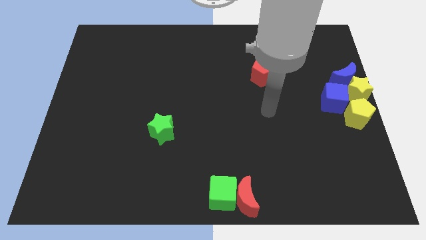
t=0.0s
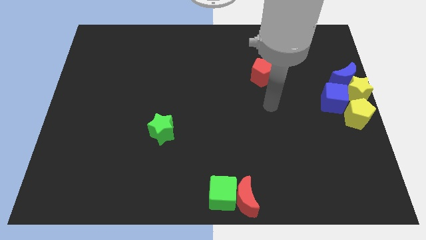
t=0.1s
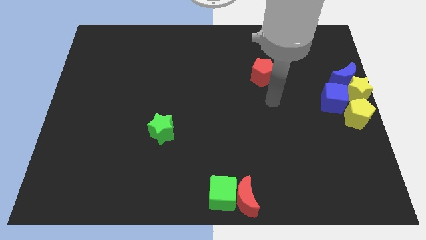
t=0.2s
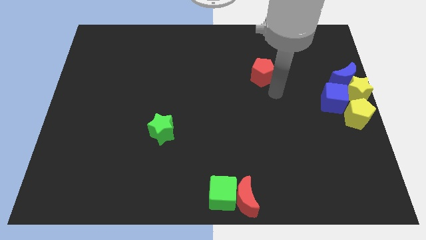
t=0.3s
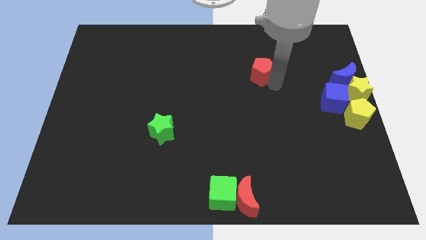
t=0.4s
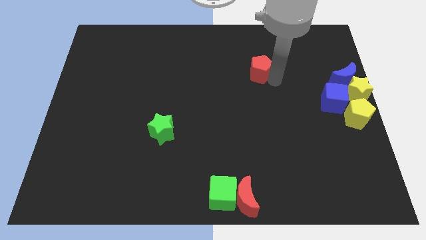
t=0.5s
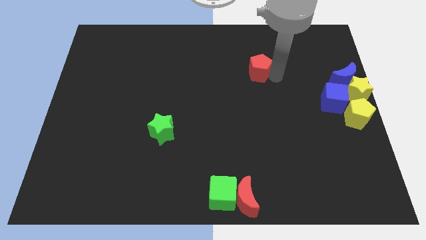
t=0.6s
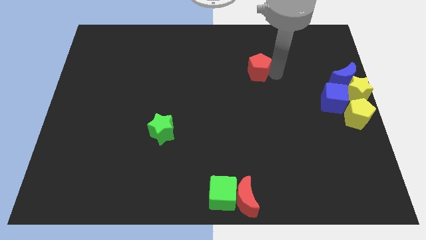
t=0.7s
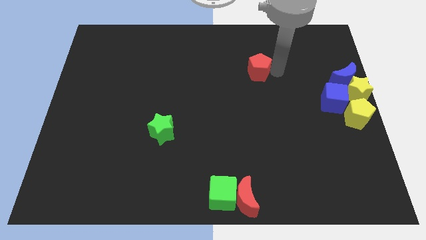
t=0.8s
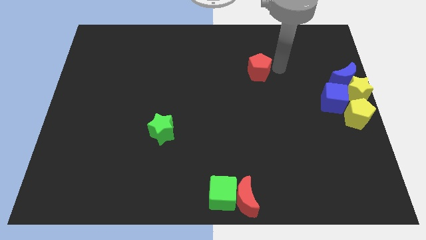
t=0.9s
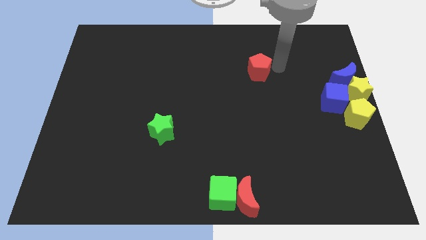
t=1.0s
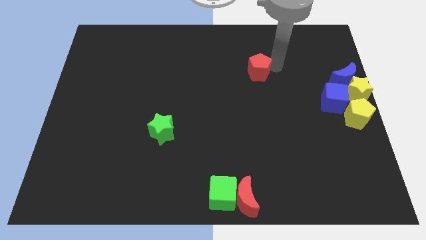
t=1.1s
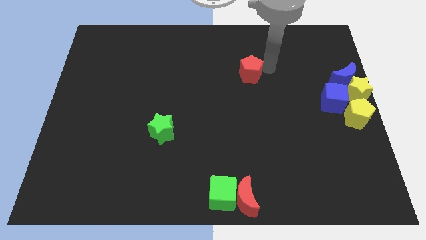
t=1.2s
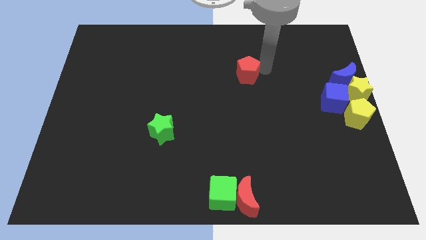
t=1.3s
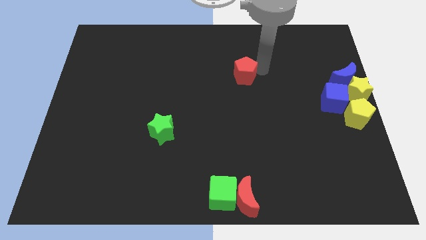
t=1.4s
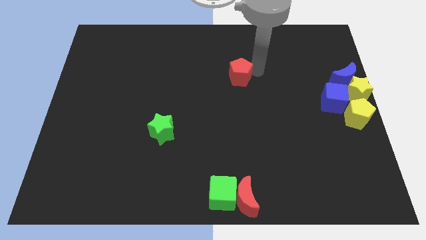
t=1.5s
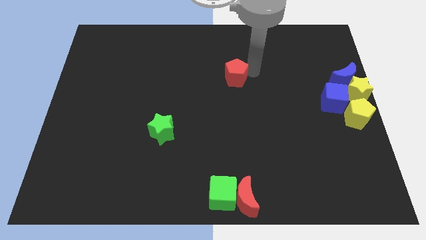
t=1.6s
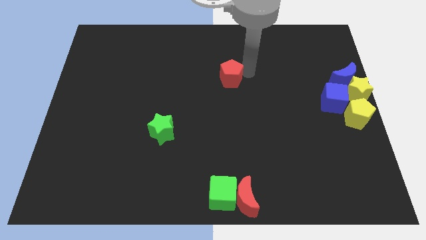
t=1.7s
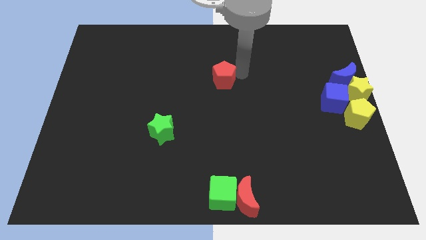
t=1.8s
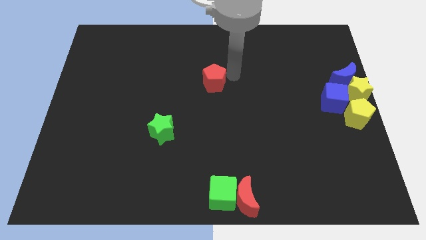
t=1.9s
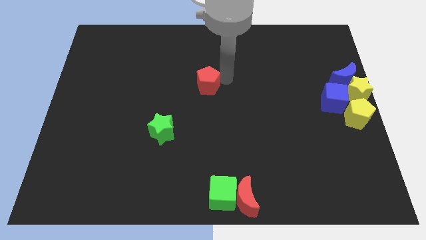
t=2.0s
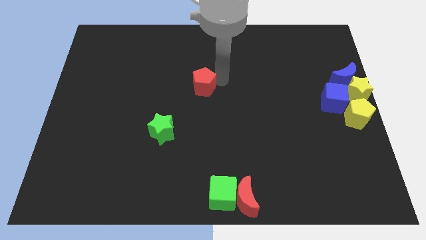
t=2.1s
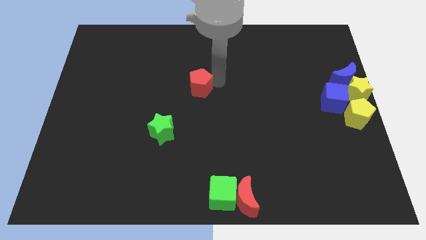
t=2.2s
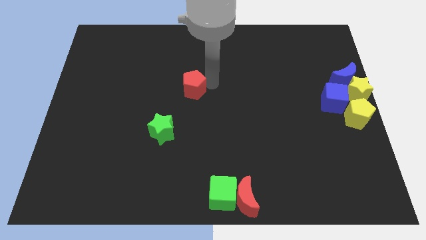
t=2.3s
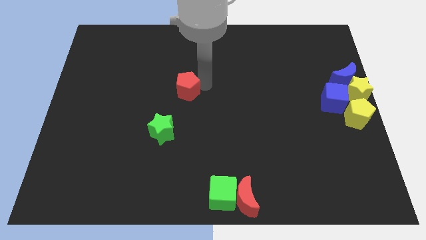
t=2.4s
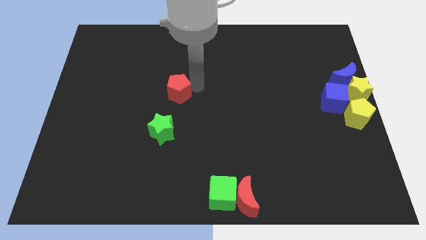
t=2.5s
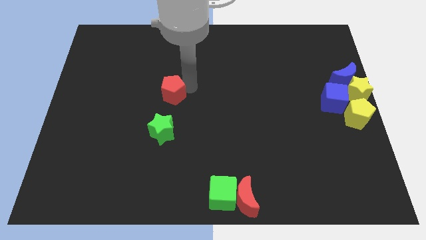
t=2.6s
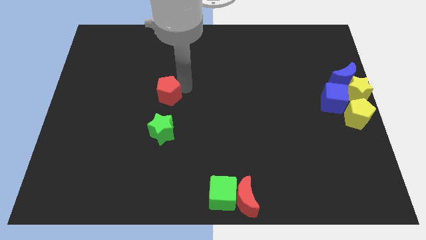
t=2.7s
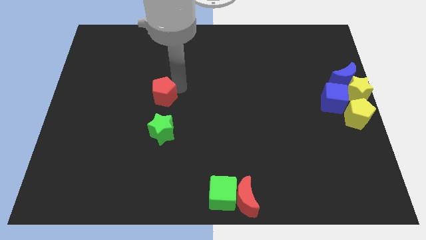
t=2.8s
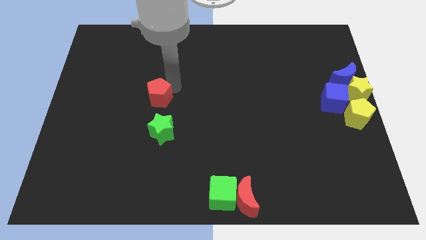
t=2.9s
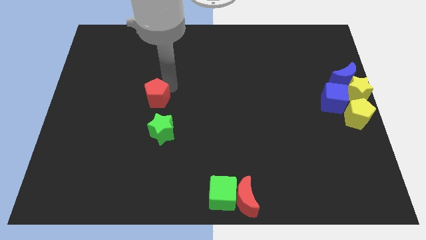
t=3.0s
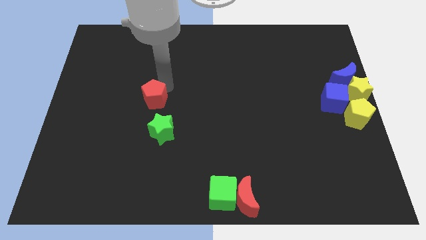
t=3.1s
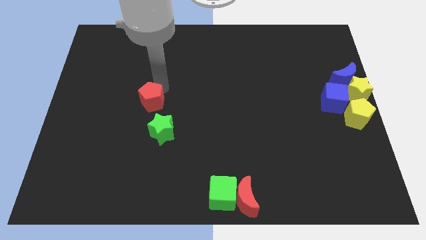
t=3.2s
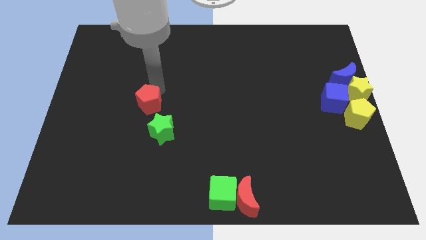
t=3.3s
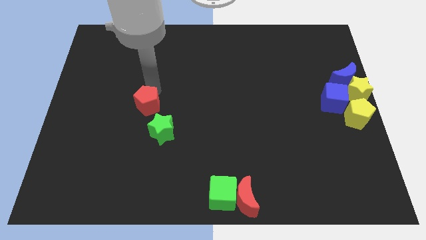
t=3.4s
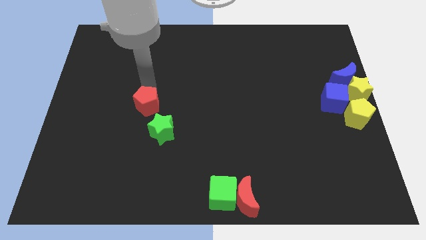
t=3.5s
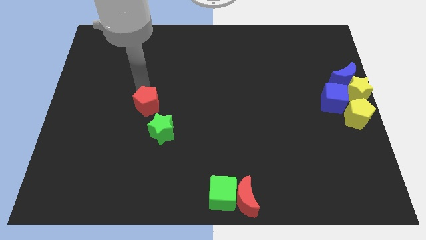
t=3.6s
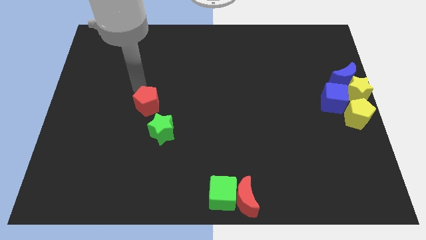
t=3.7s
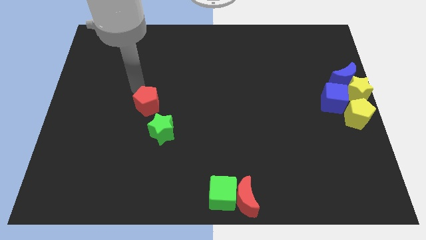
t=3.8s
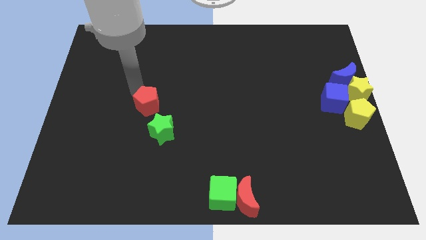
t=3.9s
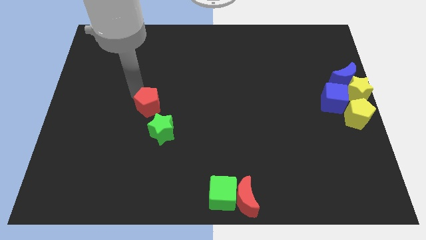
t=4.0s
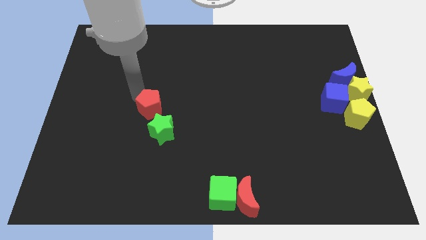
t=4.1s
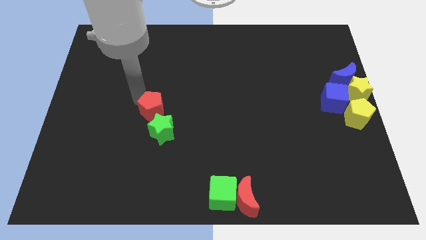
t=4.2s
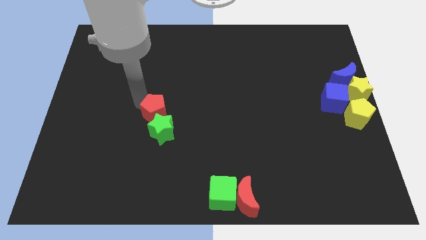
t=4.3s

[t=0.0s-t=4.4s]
push the red pentagon towards the green star

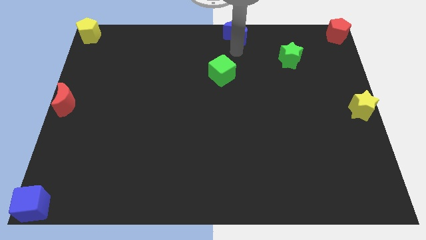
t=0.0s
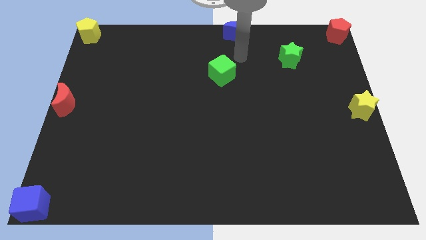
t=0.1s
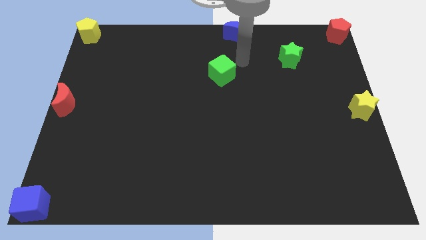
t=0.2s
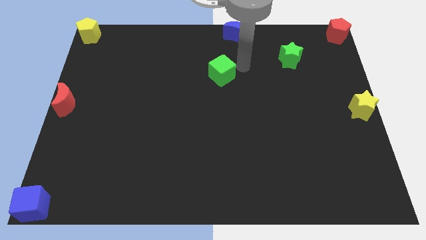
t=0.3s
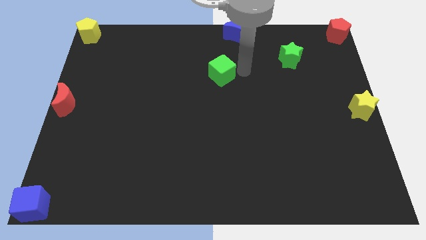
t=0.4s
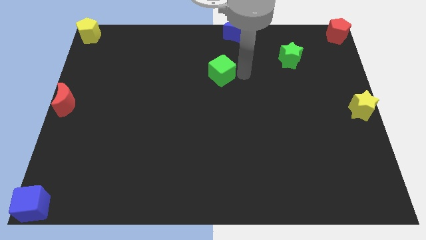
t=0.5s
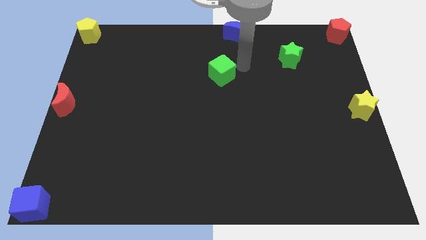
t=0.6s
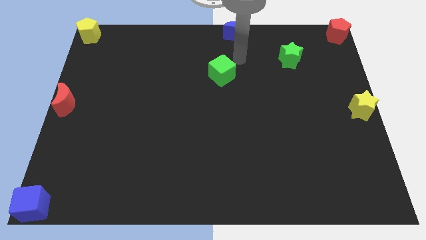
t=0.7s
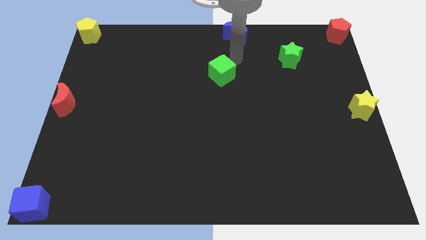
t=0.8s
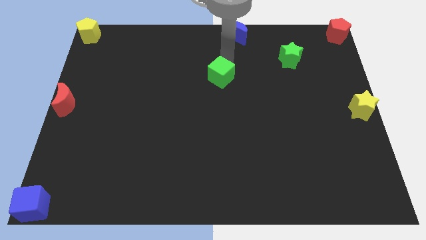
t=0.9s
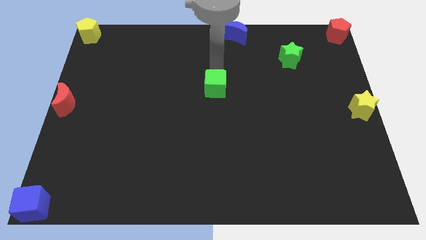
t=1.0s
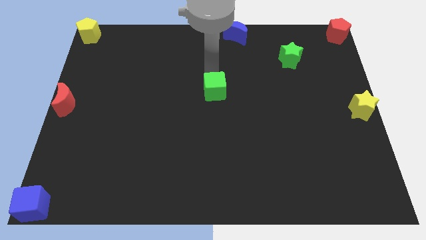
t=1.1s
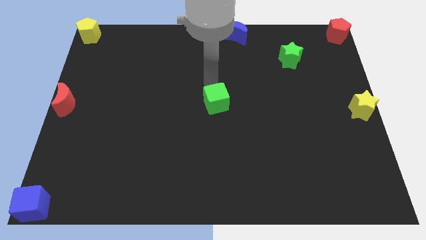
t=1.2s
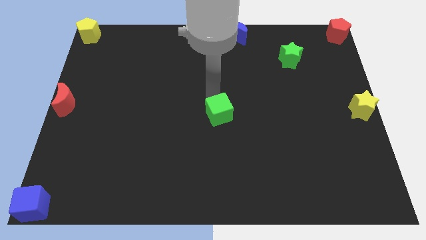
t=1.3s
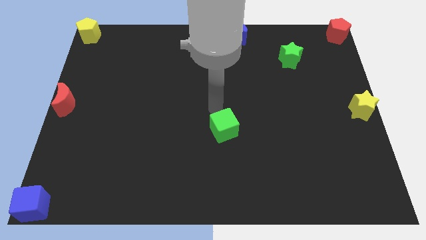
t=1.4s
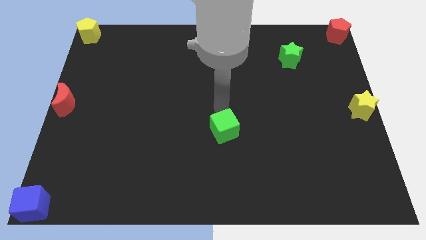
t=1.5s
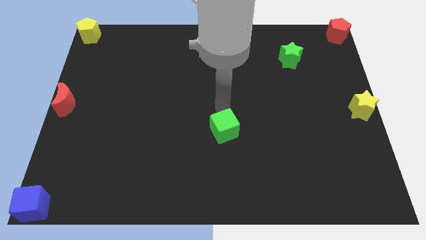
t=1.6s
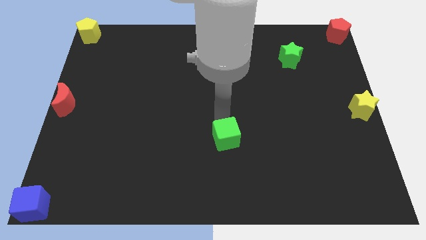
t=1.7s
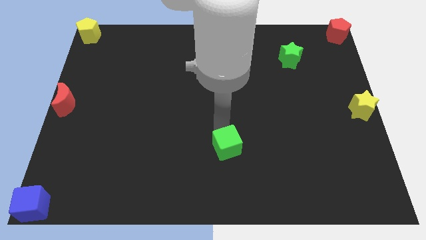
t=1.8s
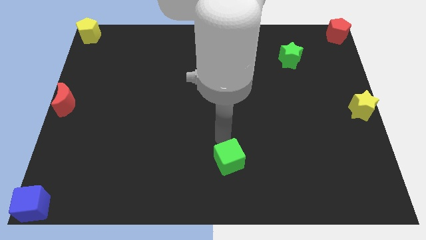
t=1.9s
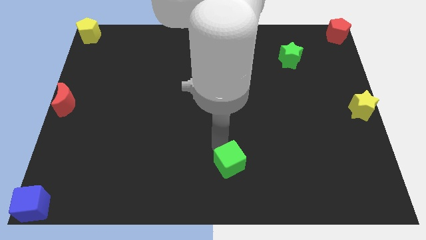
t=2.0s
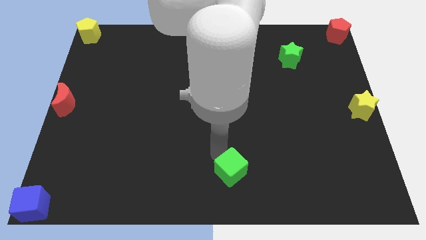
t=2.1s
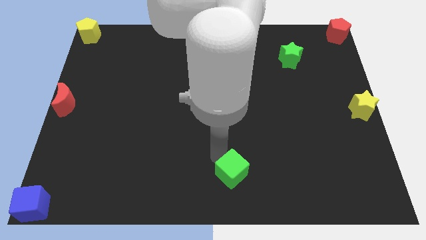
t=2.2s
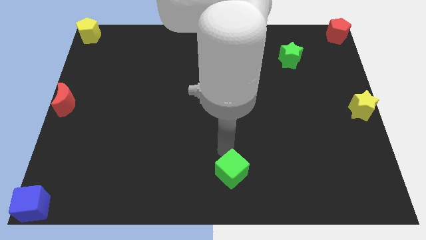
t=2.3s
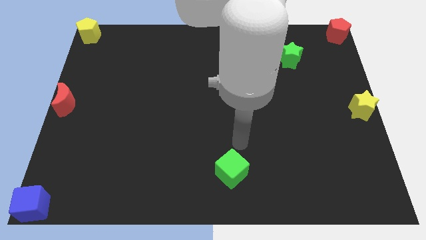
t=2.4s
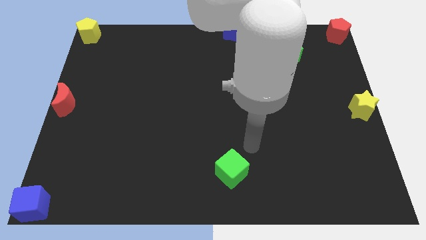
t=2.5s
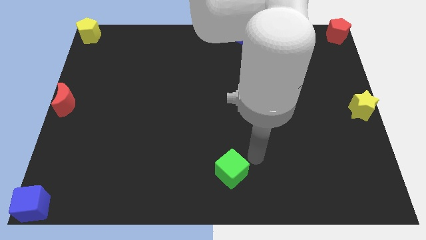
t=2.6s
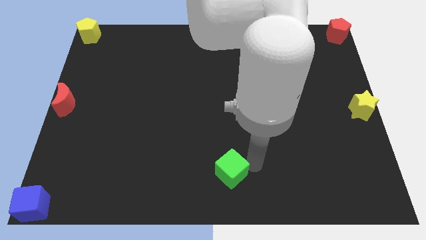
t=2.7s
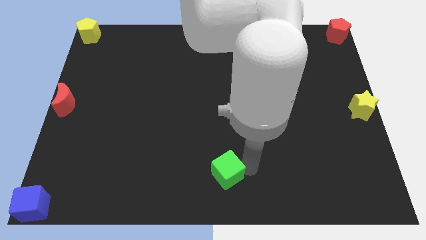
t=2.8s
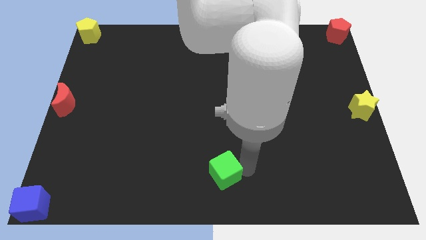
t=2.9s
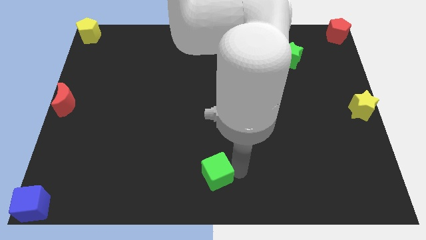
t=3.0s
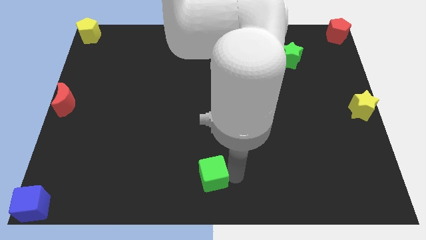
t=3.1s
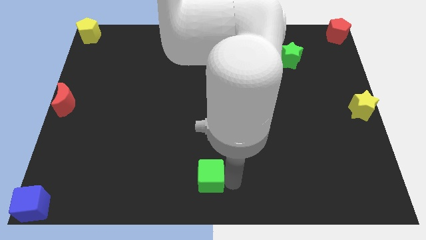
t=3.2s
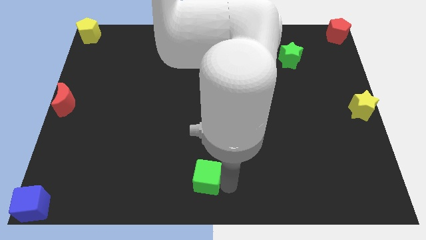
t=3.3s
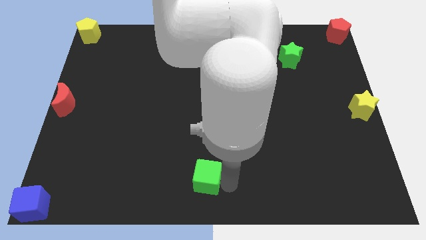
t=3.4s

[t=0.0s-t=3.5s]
push the green cube towards the bottom center of the board

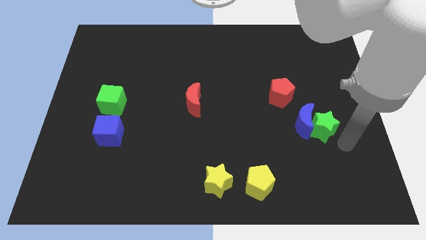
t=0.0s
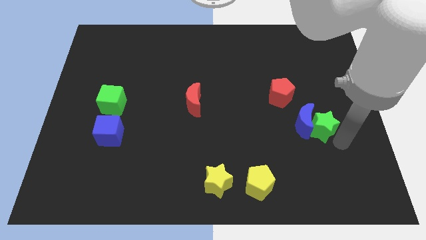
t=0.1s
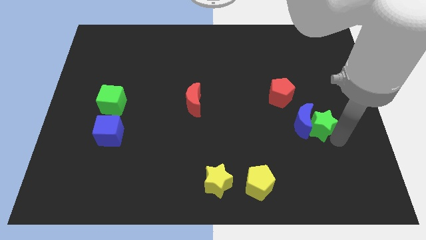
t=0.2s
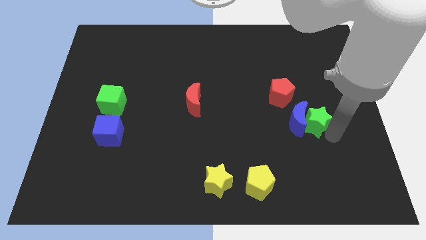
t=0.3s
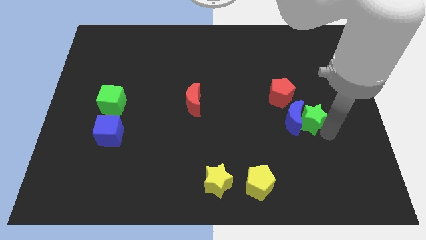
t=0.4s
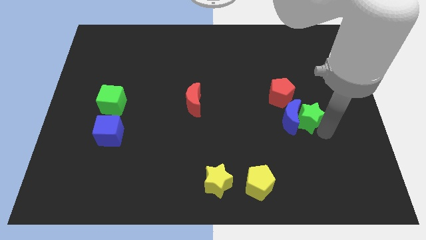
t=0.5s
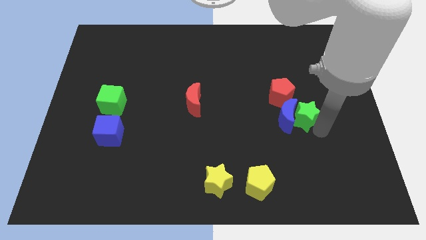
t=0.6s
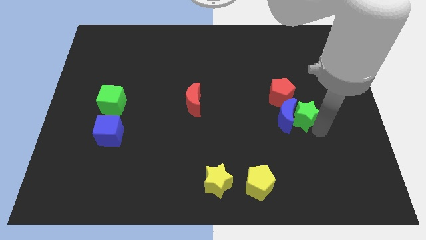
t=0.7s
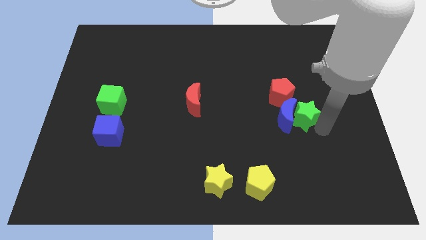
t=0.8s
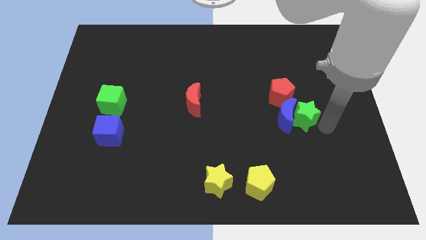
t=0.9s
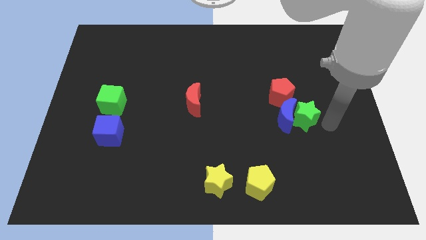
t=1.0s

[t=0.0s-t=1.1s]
place the blue crescent to the bottom of the red pentagon using the green star
